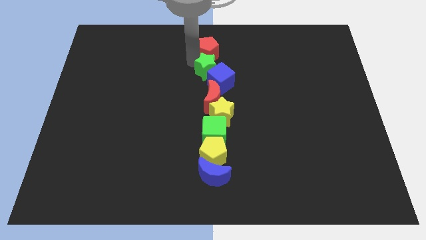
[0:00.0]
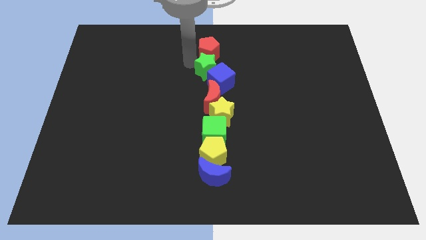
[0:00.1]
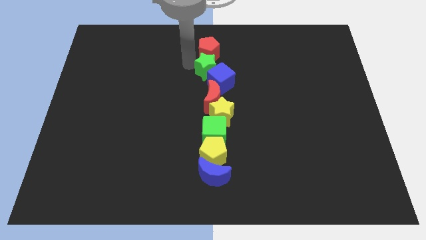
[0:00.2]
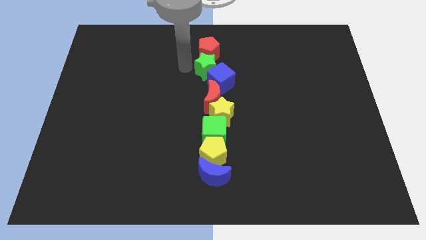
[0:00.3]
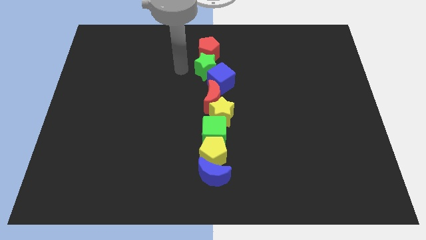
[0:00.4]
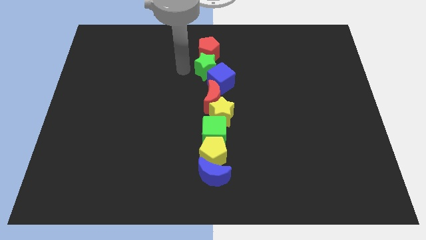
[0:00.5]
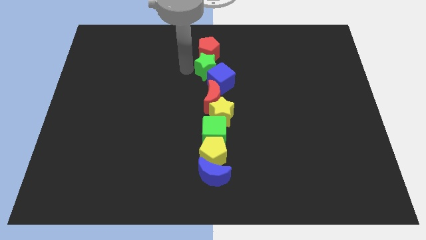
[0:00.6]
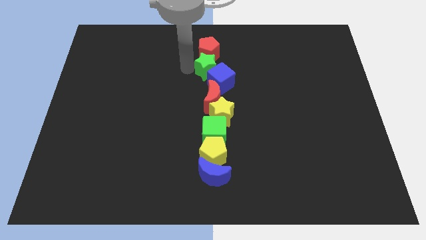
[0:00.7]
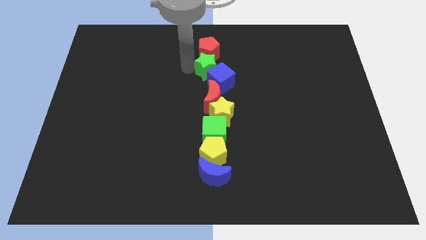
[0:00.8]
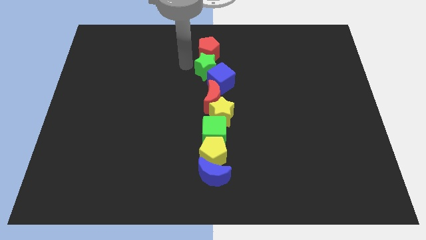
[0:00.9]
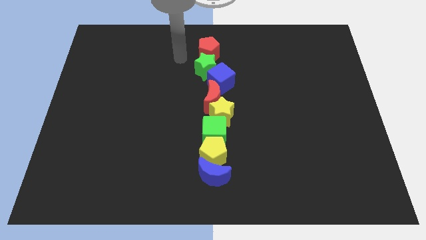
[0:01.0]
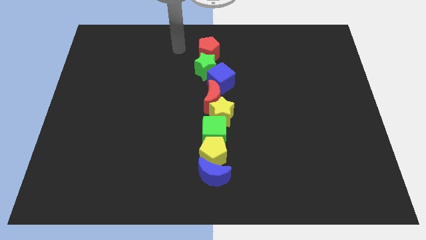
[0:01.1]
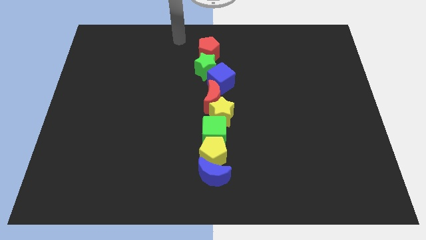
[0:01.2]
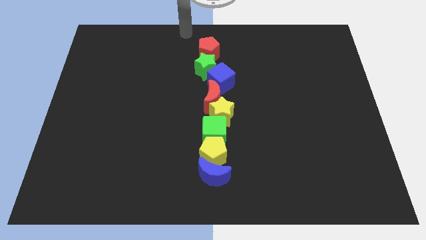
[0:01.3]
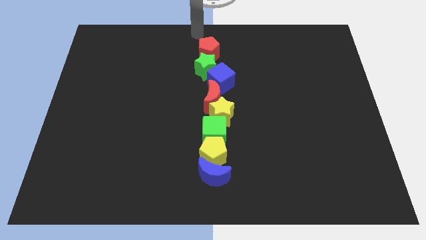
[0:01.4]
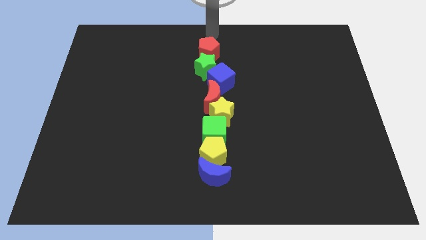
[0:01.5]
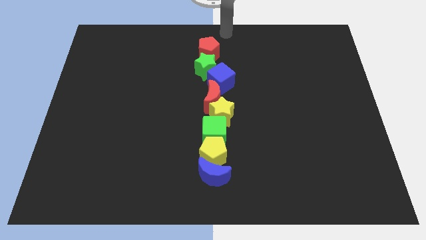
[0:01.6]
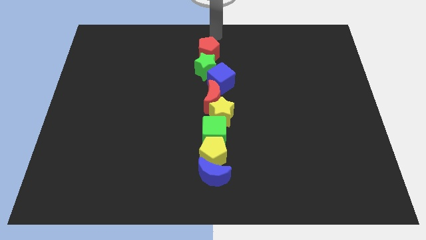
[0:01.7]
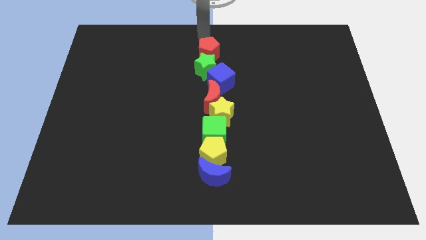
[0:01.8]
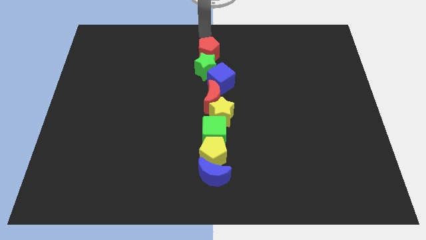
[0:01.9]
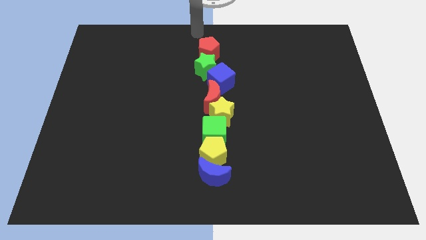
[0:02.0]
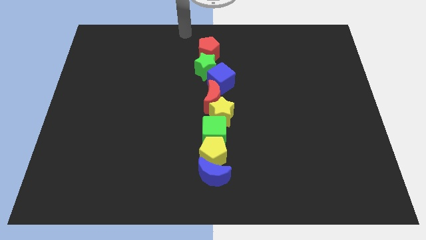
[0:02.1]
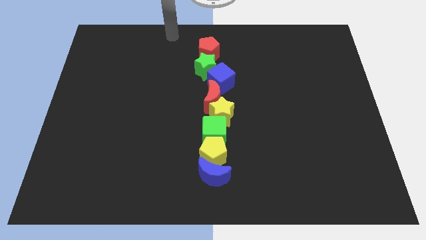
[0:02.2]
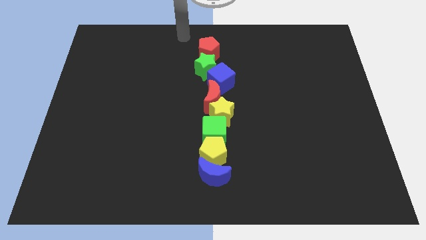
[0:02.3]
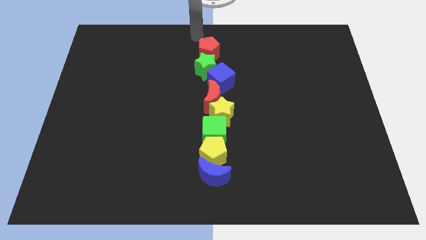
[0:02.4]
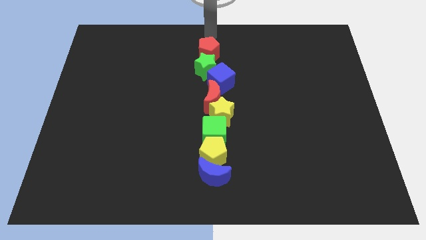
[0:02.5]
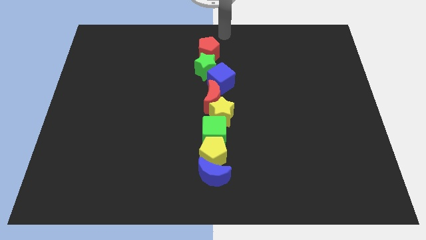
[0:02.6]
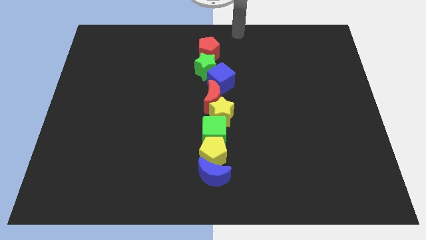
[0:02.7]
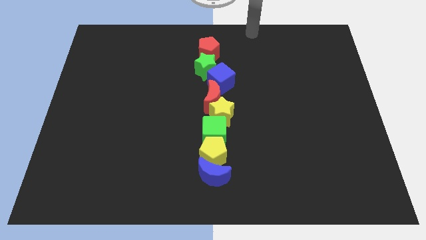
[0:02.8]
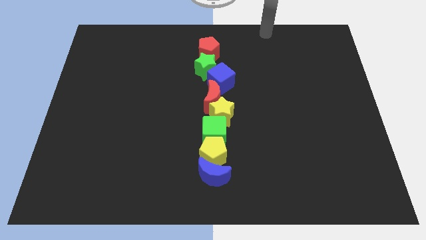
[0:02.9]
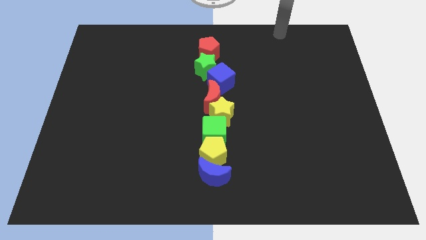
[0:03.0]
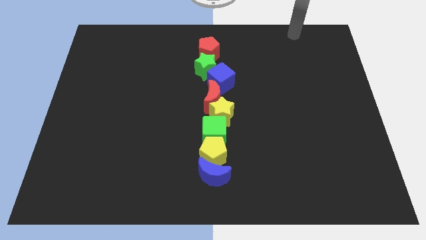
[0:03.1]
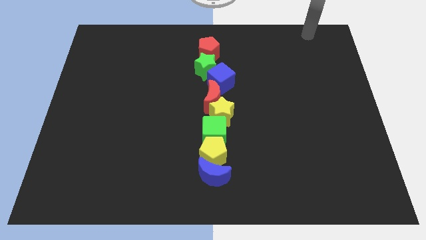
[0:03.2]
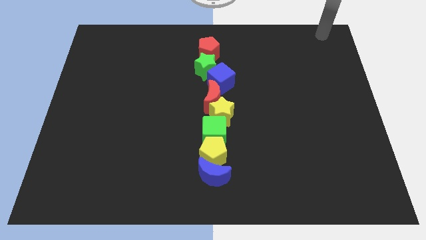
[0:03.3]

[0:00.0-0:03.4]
move the arm away from the green star

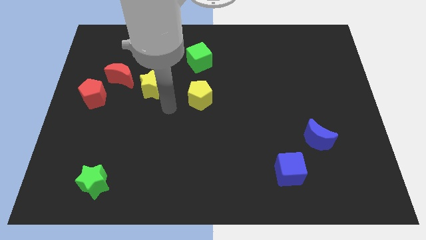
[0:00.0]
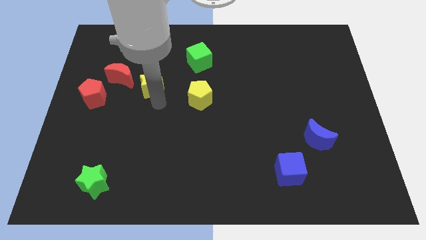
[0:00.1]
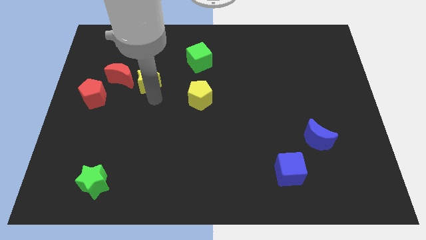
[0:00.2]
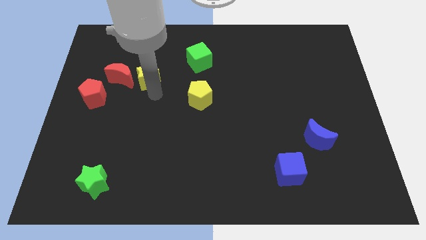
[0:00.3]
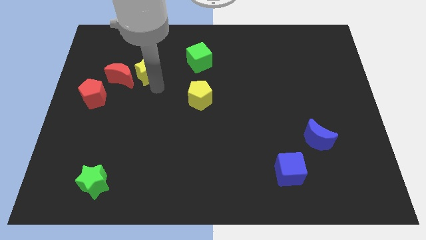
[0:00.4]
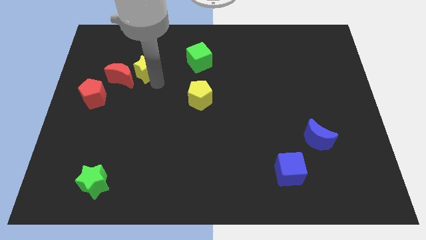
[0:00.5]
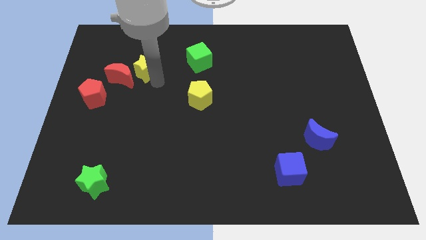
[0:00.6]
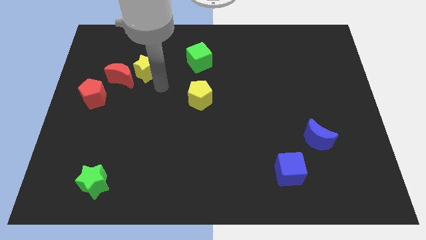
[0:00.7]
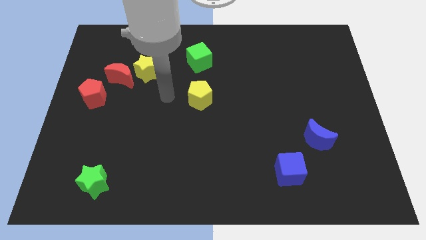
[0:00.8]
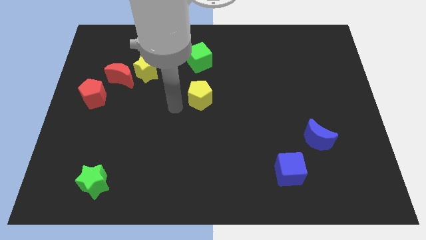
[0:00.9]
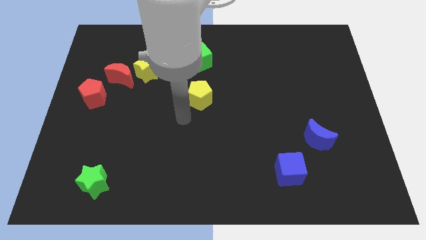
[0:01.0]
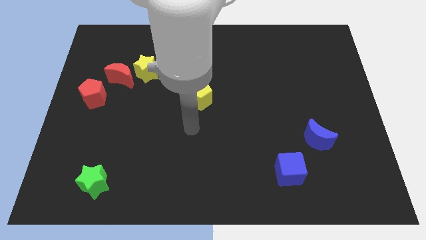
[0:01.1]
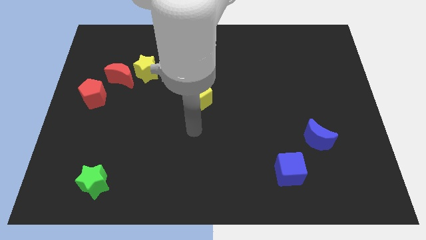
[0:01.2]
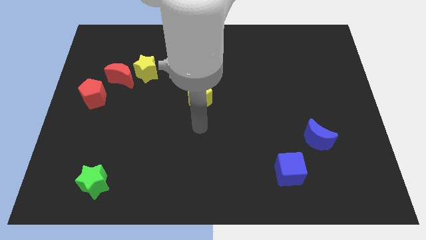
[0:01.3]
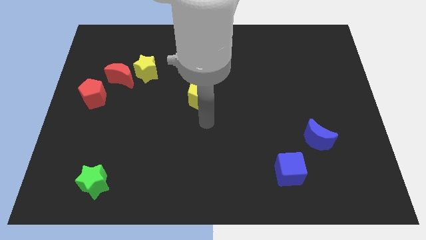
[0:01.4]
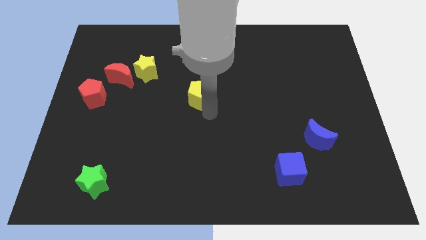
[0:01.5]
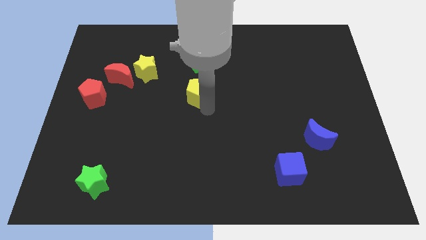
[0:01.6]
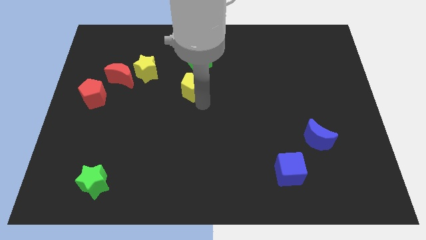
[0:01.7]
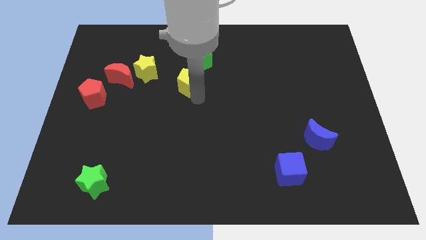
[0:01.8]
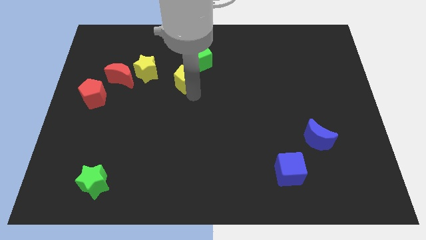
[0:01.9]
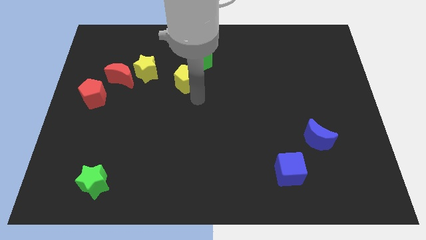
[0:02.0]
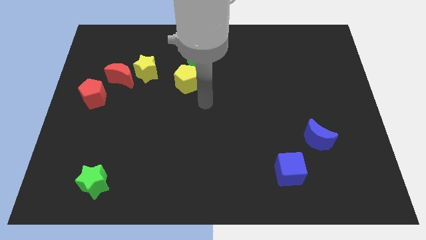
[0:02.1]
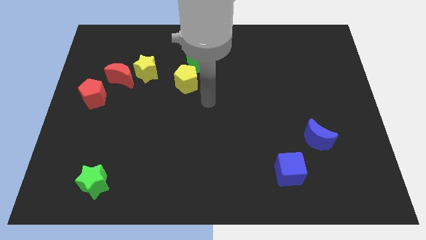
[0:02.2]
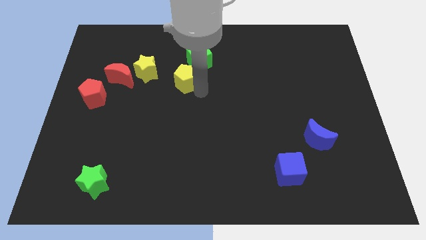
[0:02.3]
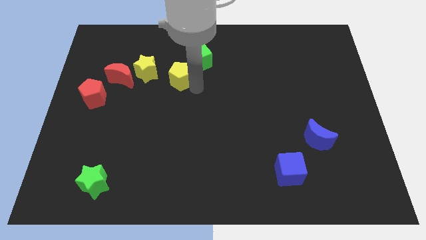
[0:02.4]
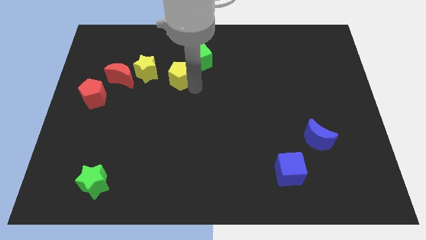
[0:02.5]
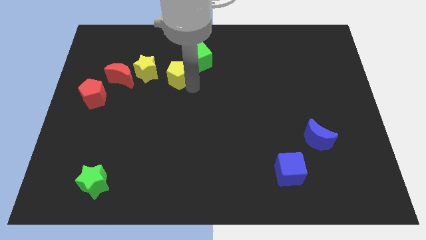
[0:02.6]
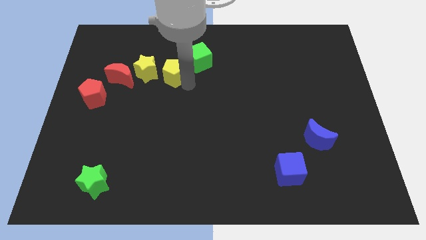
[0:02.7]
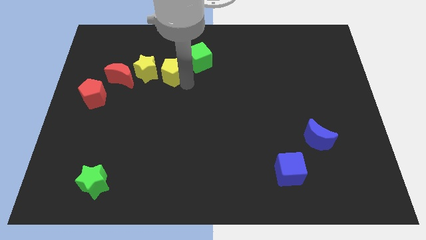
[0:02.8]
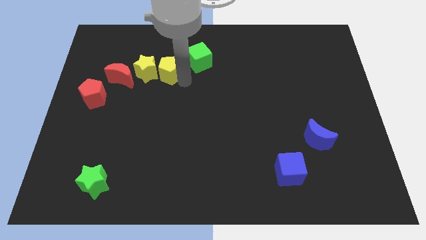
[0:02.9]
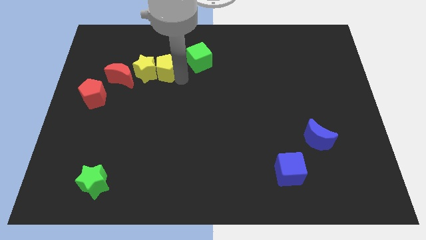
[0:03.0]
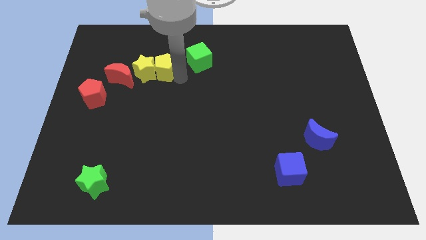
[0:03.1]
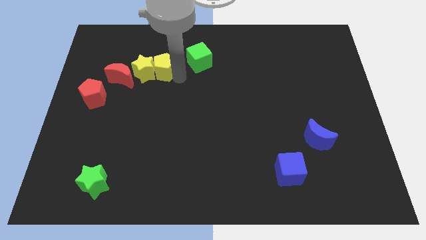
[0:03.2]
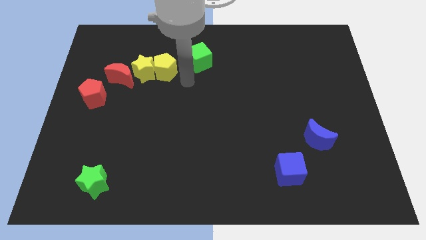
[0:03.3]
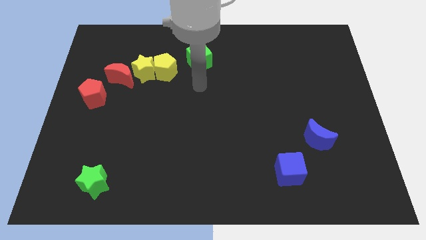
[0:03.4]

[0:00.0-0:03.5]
put the yellow blocks in between the green cube and red moon

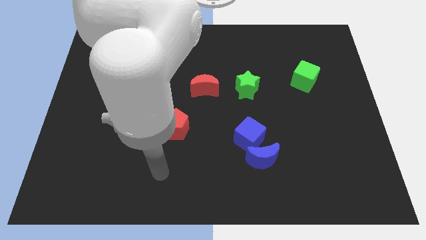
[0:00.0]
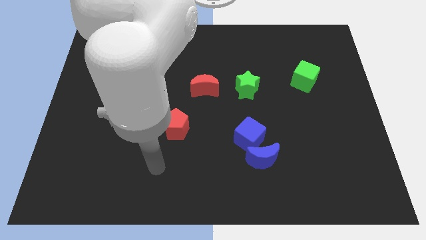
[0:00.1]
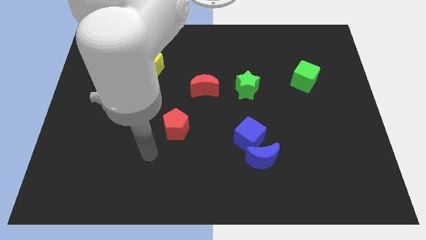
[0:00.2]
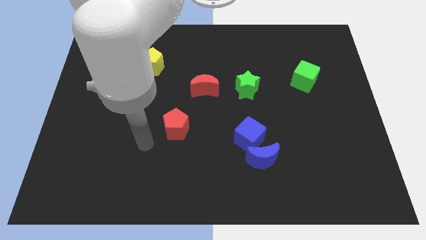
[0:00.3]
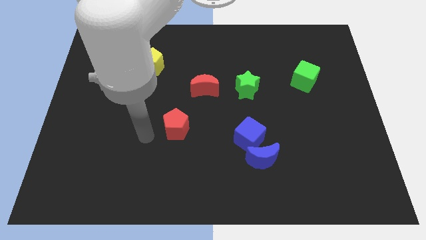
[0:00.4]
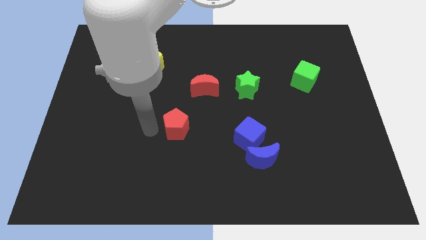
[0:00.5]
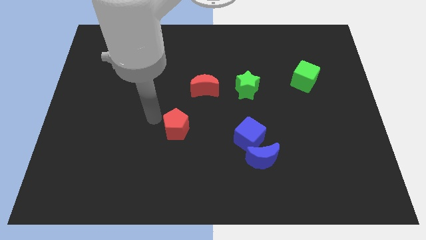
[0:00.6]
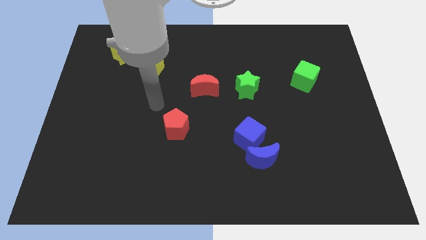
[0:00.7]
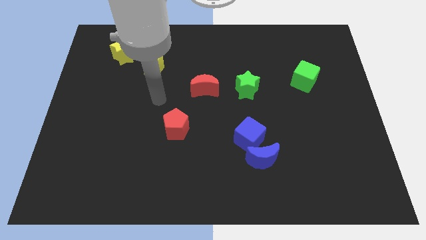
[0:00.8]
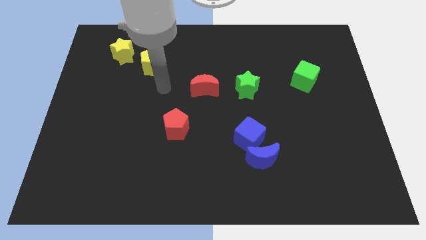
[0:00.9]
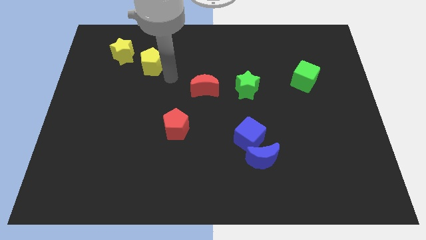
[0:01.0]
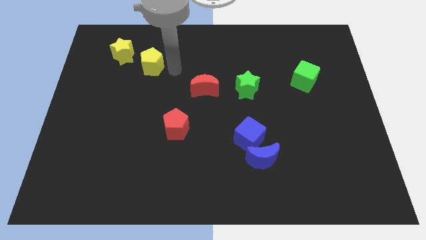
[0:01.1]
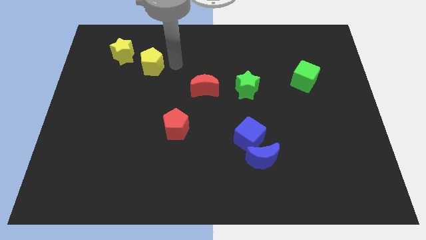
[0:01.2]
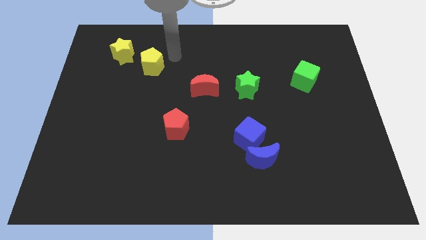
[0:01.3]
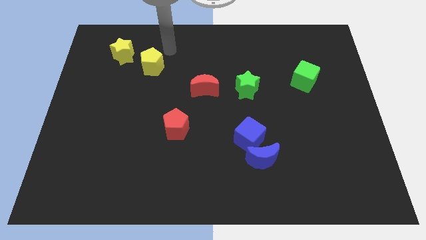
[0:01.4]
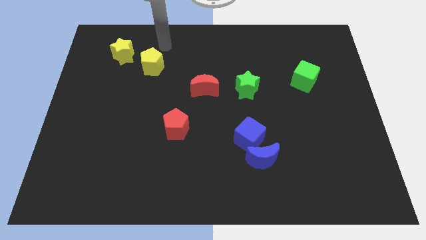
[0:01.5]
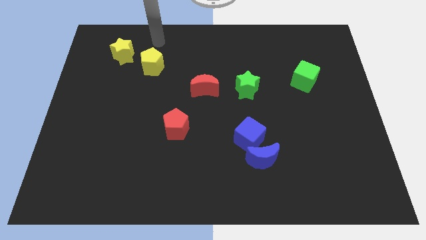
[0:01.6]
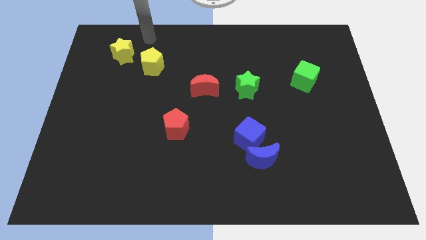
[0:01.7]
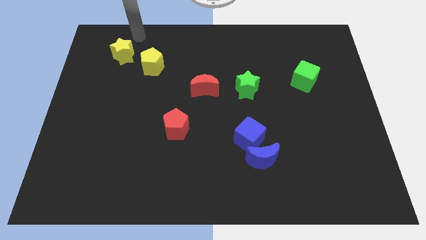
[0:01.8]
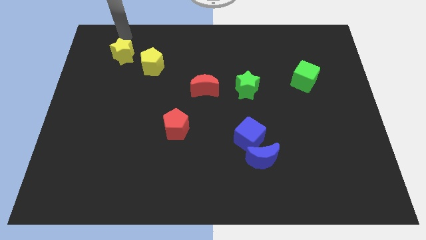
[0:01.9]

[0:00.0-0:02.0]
move your arm above the yellow star
